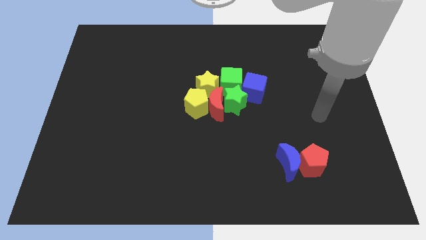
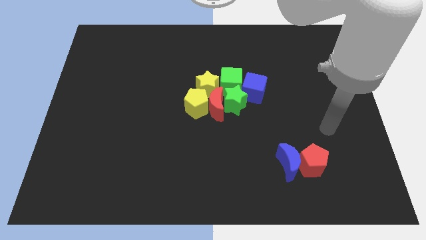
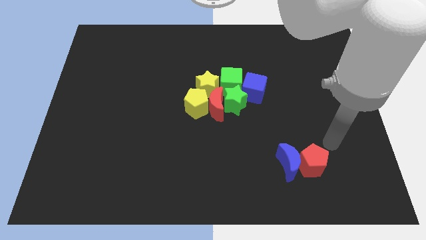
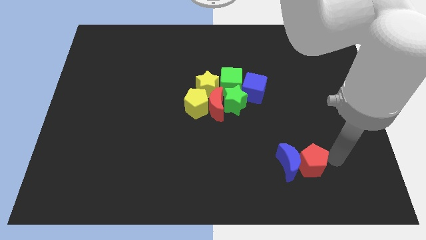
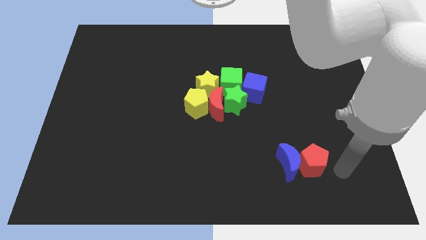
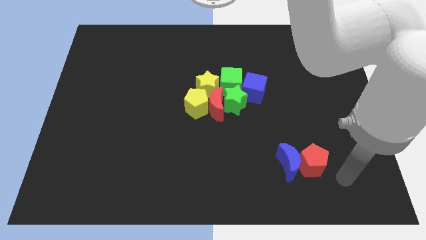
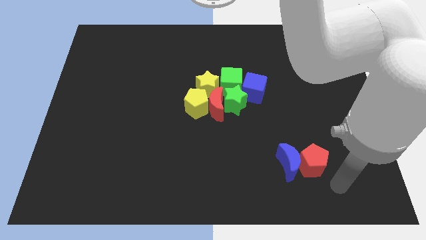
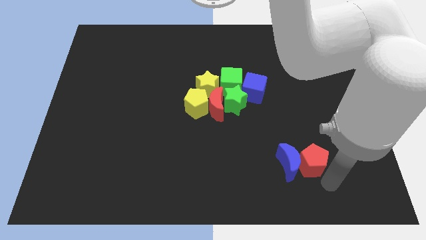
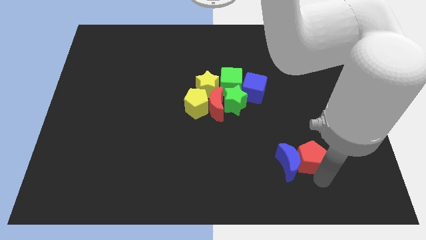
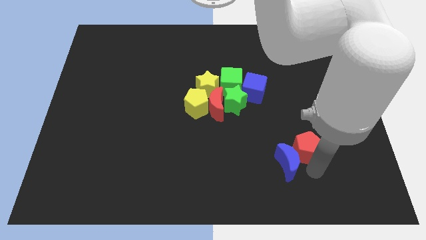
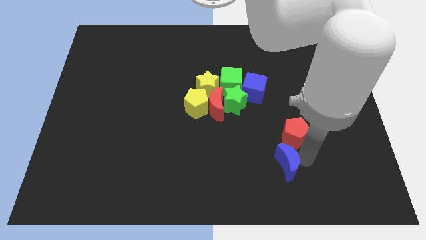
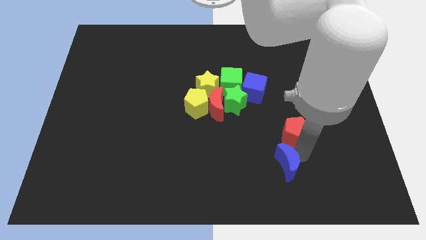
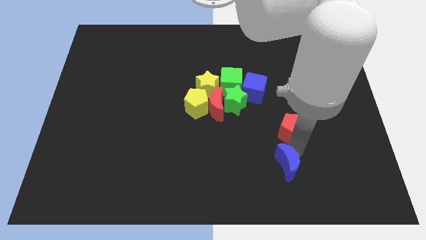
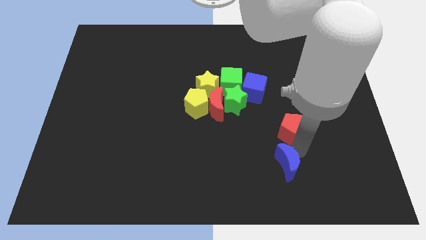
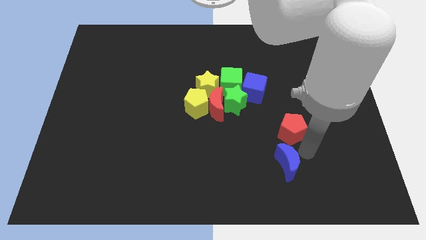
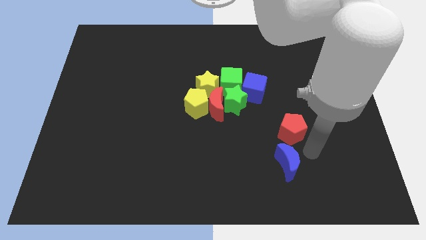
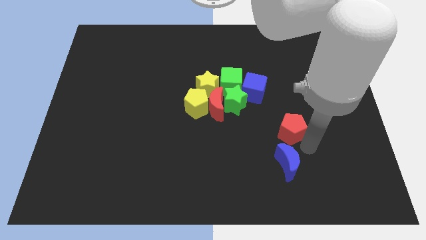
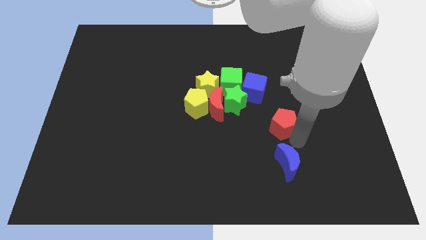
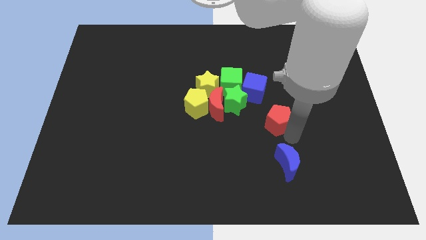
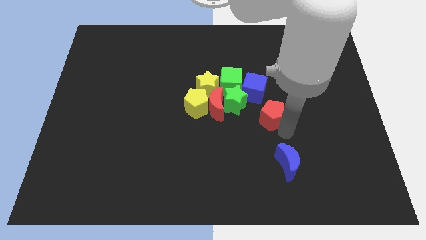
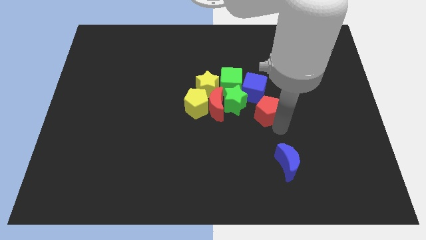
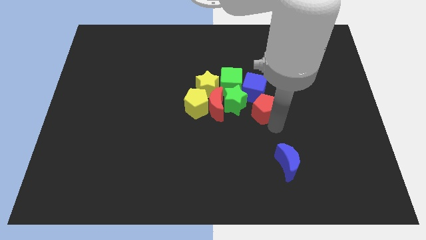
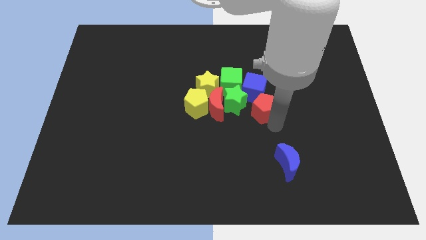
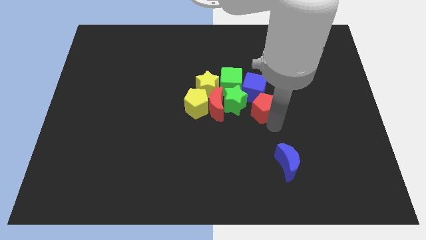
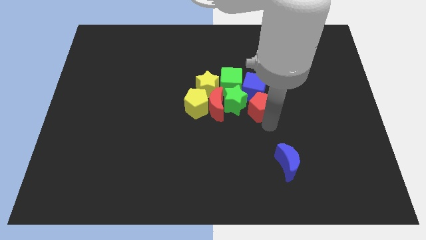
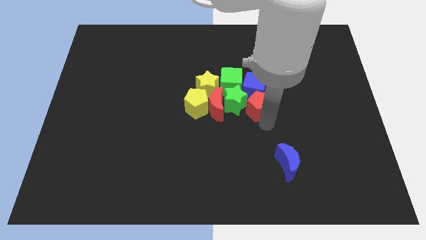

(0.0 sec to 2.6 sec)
separate the red pentagon from the blue moon

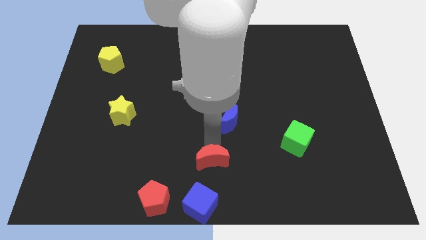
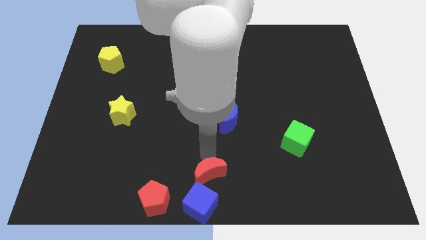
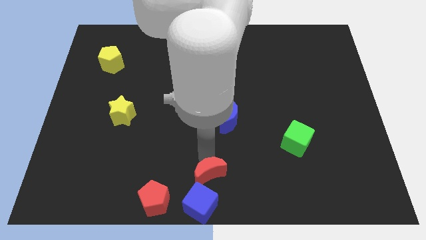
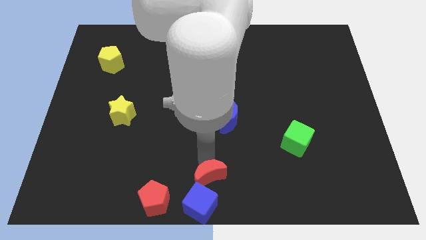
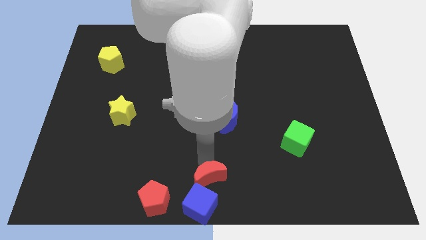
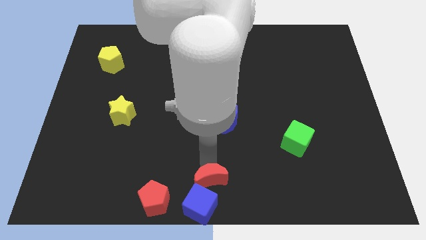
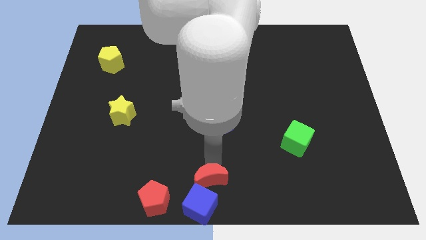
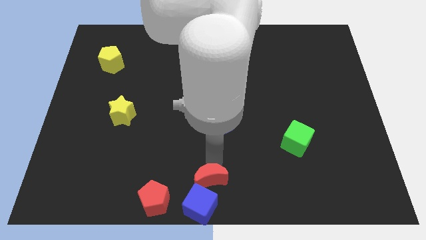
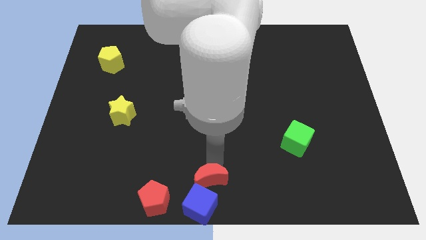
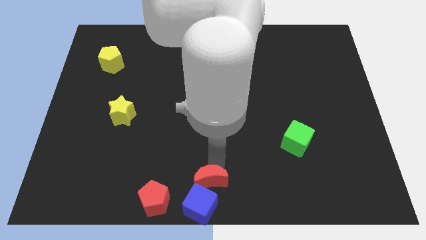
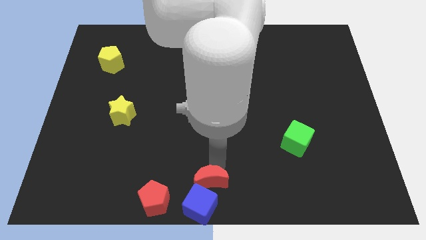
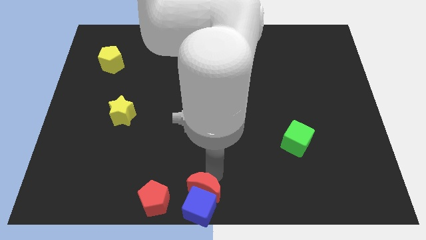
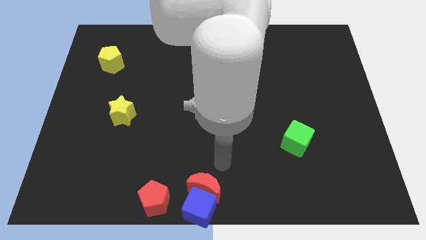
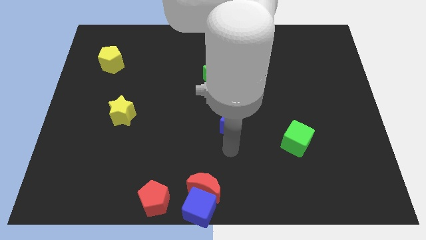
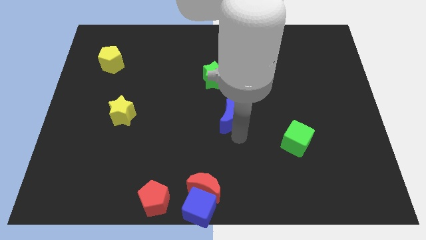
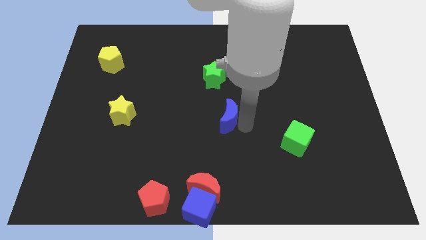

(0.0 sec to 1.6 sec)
push the red crescent into the blue cube

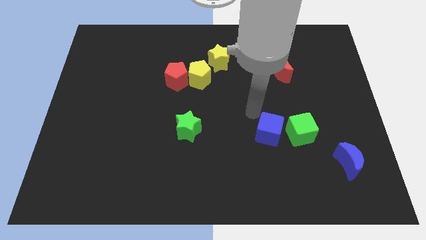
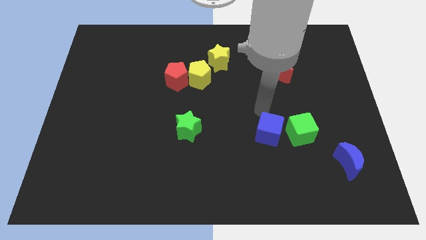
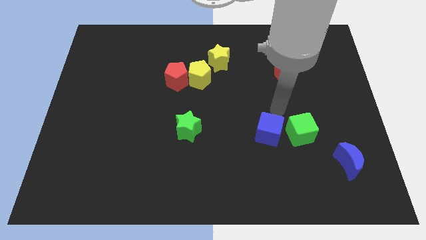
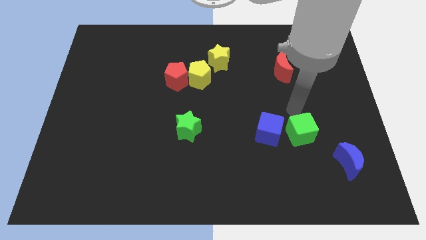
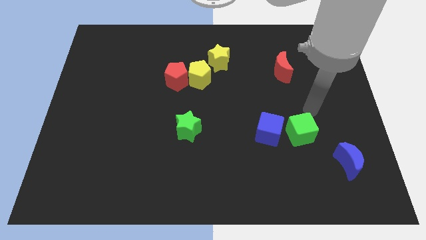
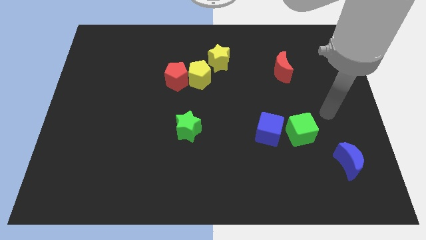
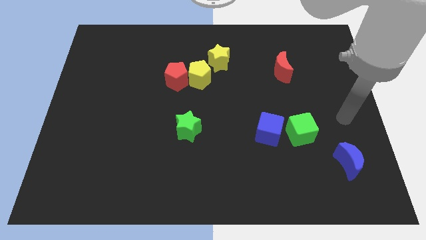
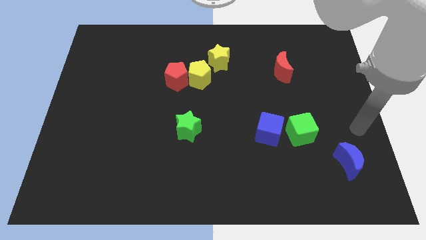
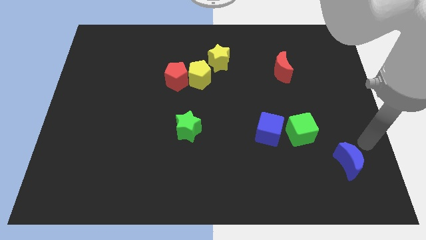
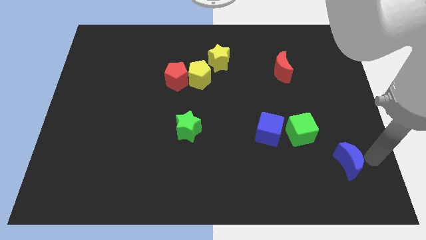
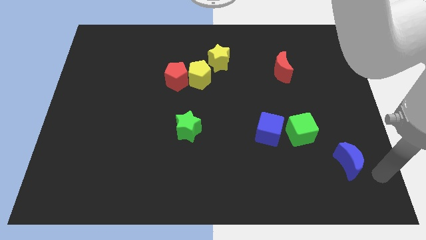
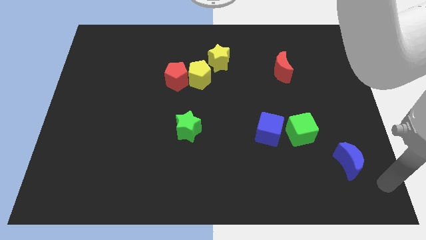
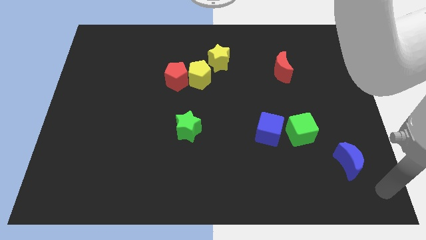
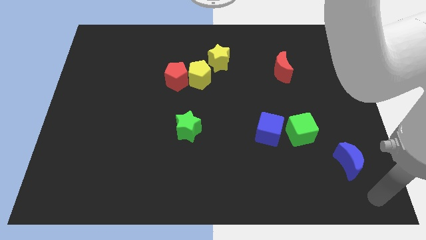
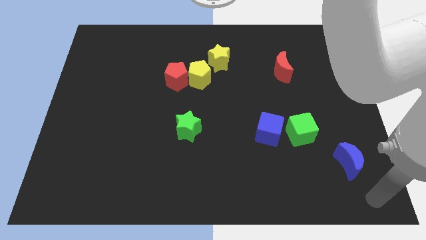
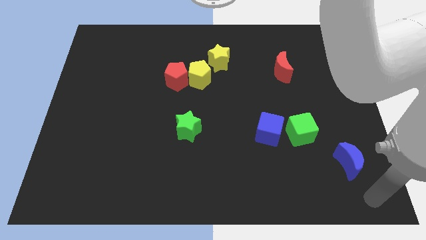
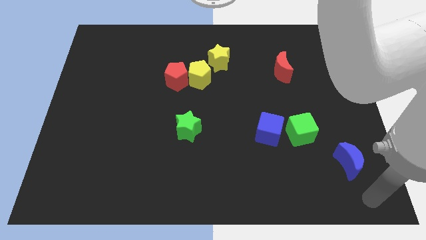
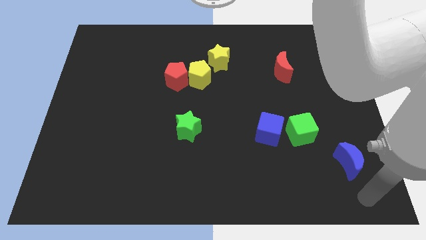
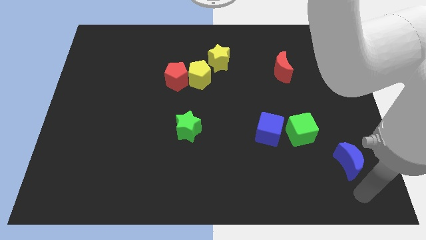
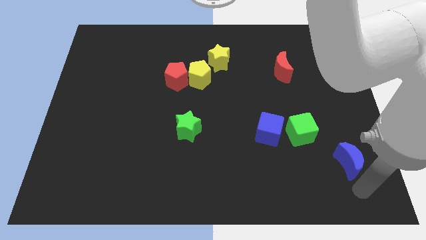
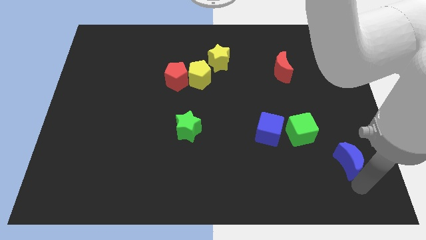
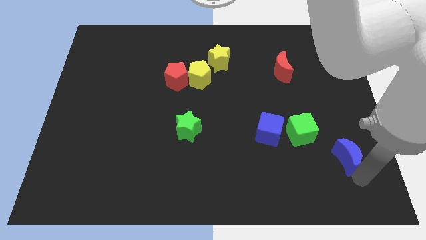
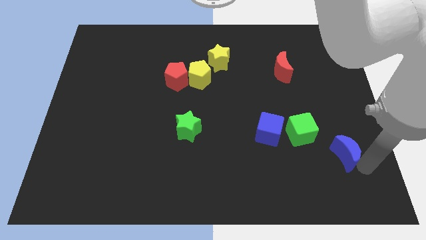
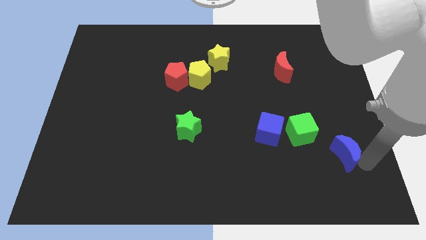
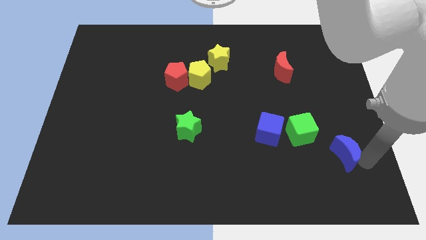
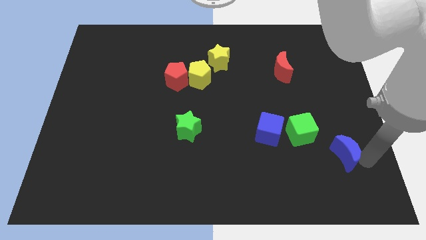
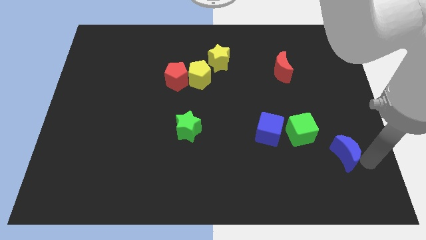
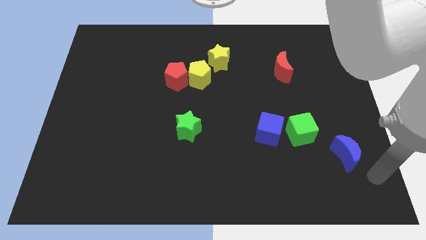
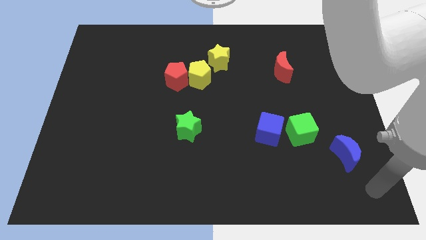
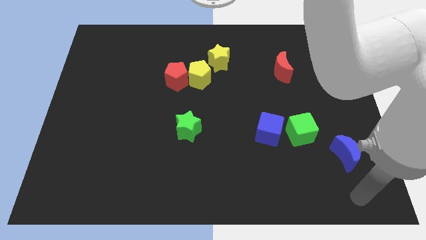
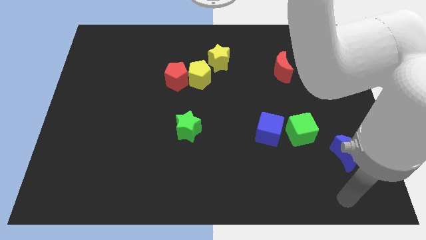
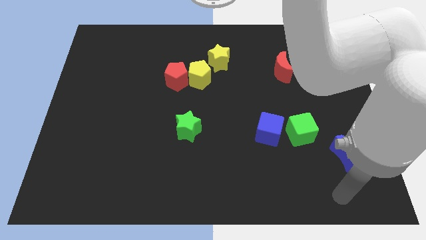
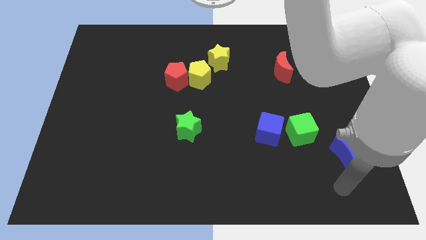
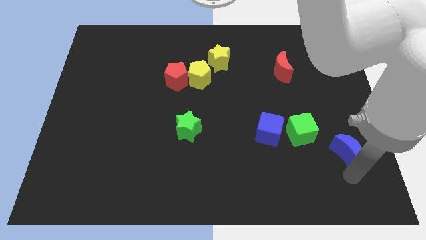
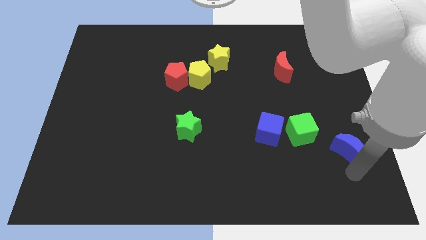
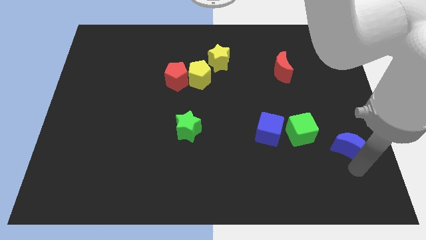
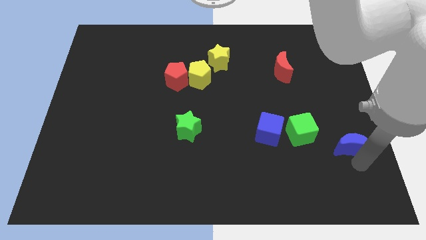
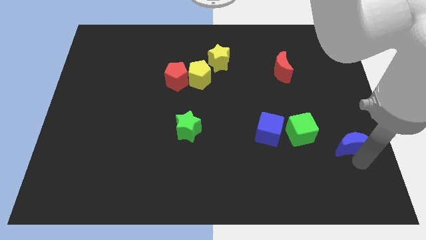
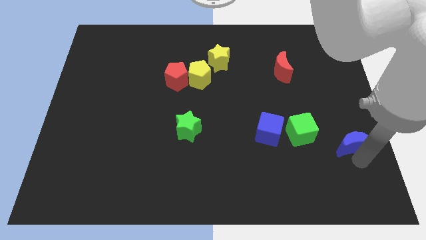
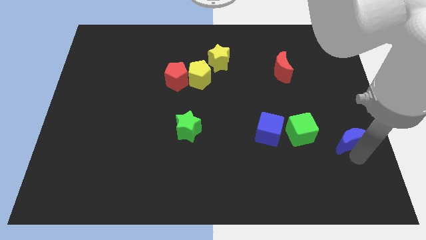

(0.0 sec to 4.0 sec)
move the blue moon upwards

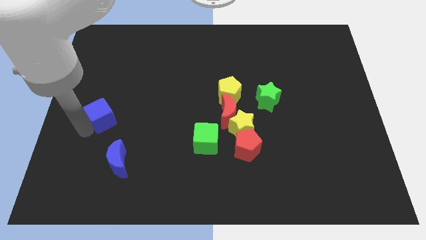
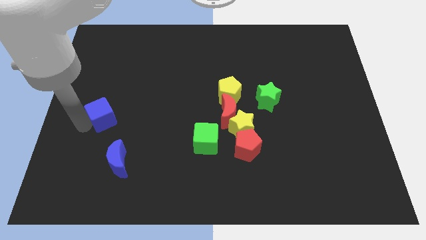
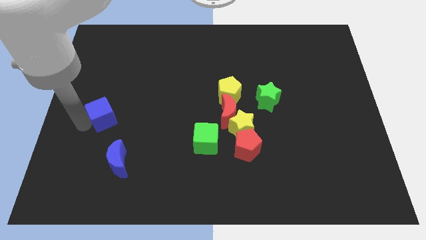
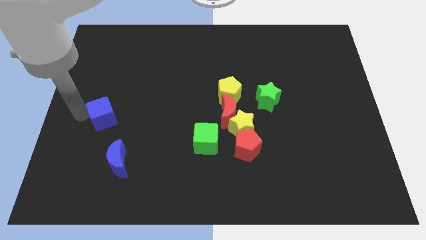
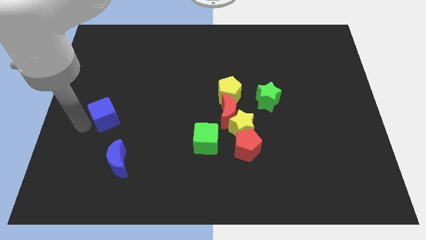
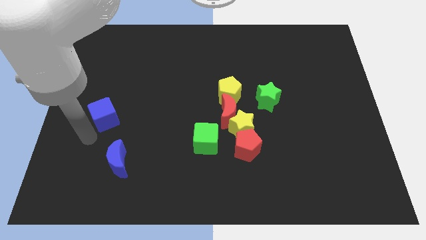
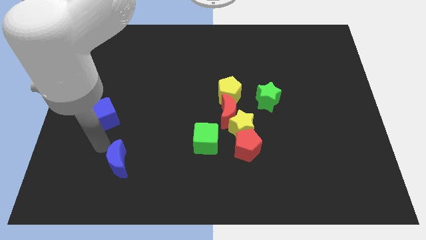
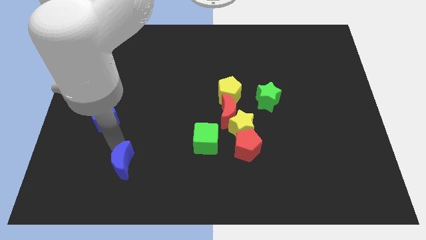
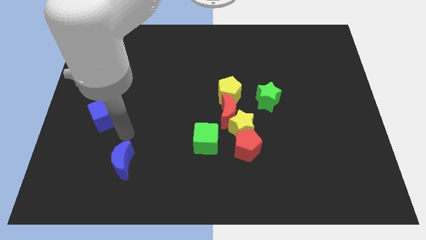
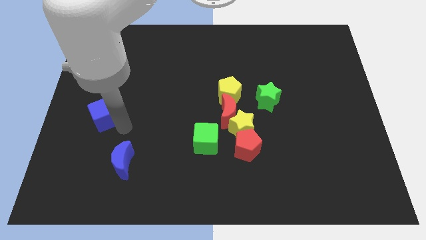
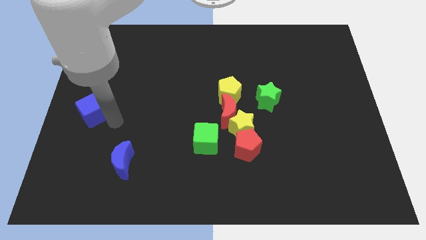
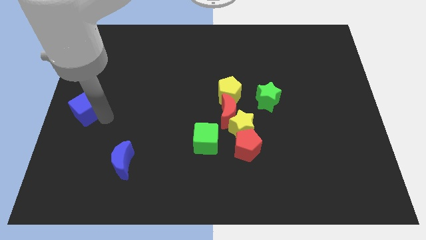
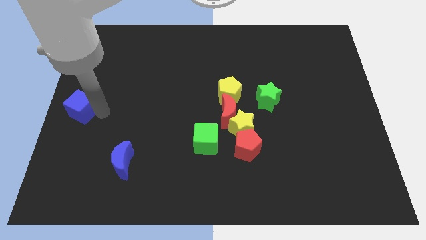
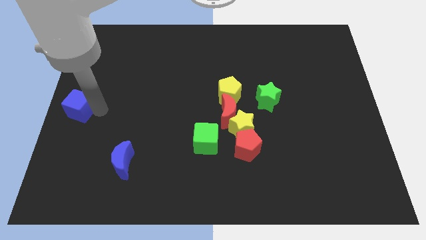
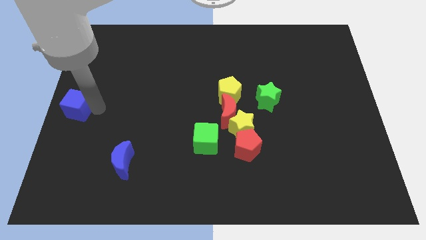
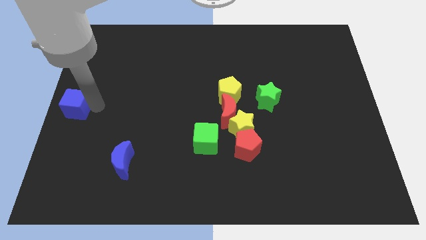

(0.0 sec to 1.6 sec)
push the blue cube slightly to the left
